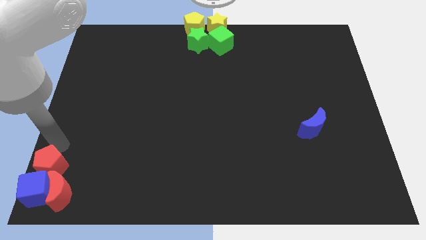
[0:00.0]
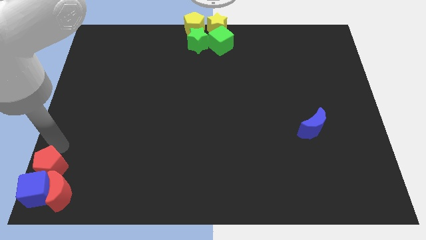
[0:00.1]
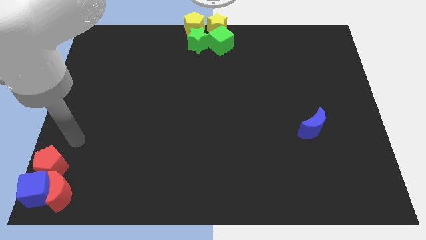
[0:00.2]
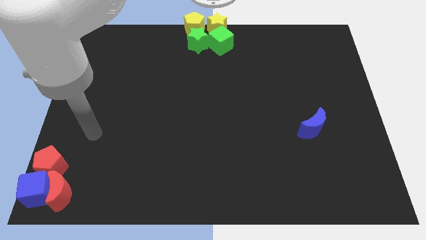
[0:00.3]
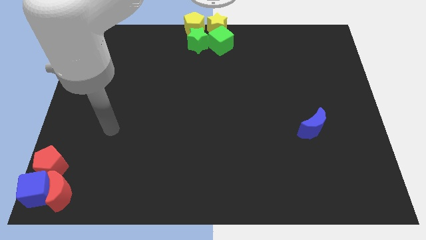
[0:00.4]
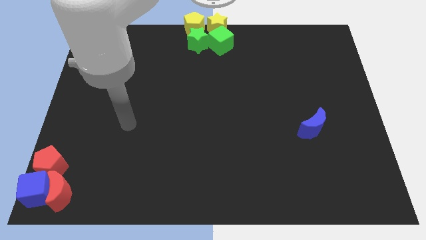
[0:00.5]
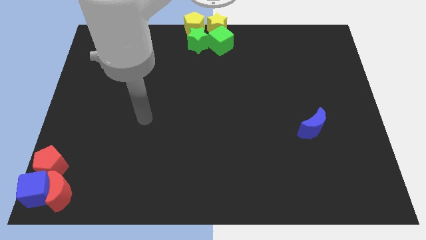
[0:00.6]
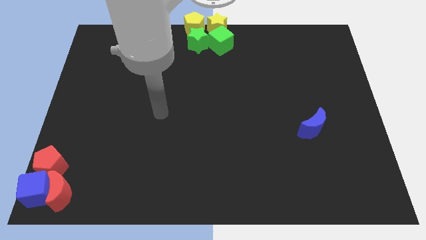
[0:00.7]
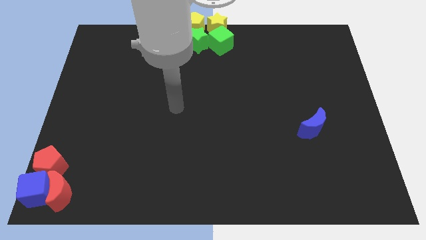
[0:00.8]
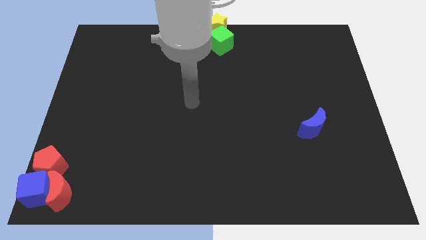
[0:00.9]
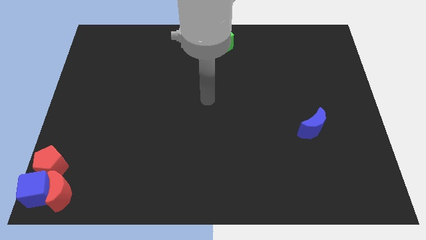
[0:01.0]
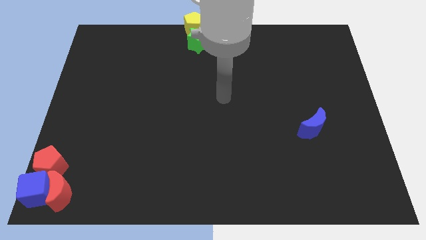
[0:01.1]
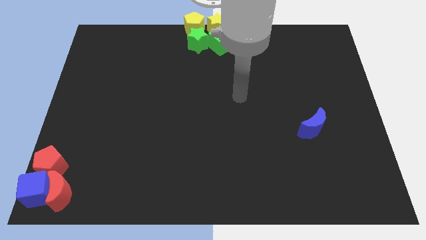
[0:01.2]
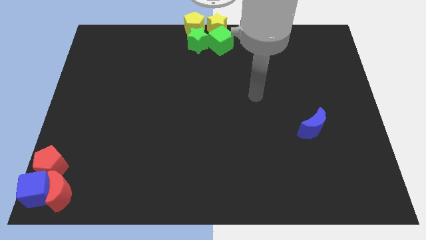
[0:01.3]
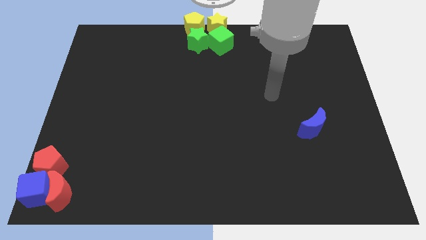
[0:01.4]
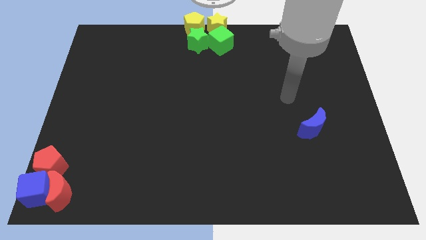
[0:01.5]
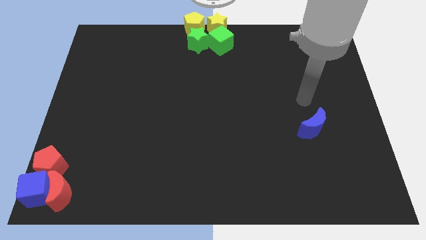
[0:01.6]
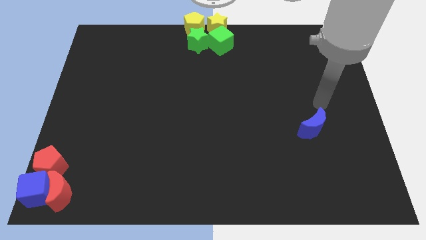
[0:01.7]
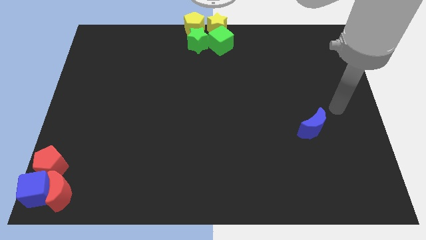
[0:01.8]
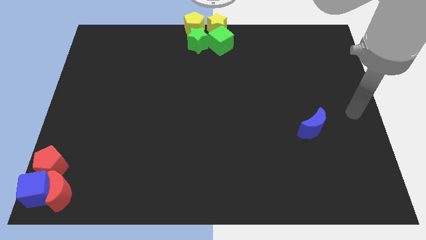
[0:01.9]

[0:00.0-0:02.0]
move your arm away from the red pentagon

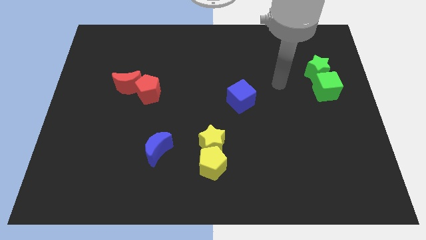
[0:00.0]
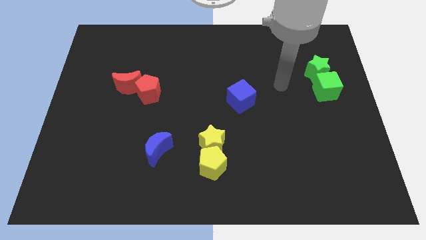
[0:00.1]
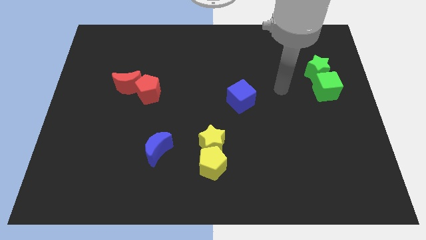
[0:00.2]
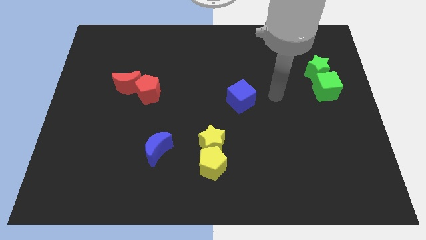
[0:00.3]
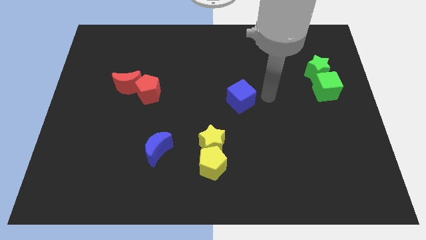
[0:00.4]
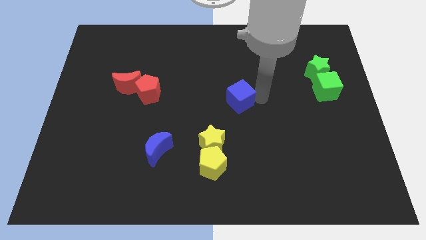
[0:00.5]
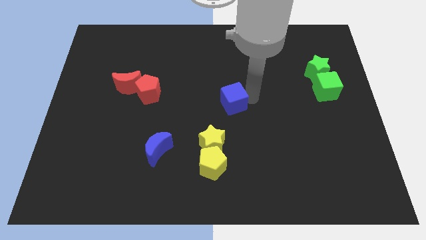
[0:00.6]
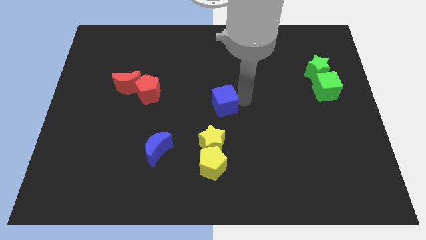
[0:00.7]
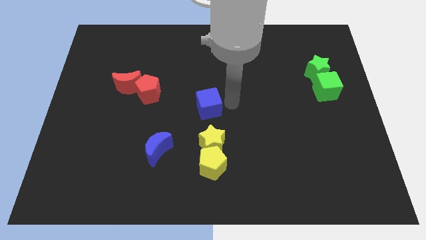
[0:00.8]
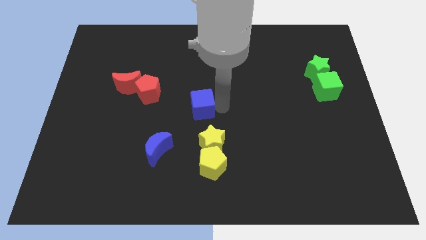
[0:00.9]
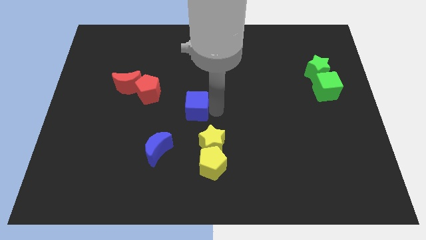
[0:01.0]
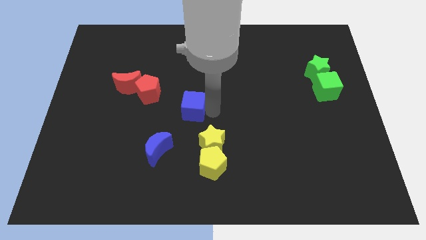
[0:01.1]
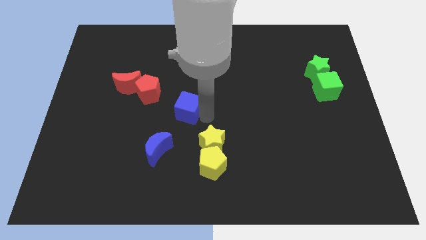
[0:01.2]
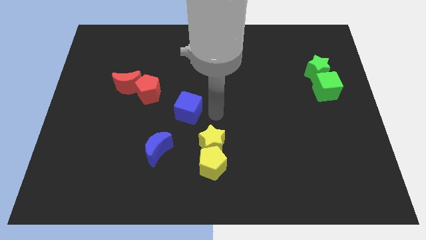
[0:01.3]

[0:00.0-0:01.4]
place blue cube towards blue moon

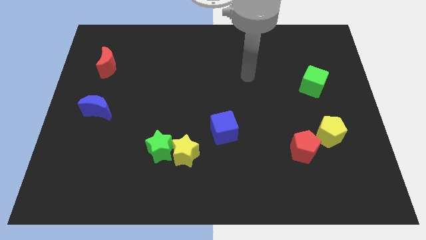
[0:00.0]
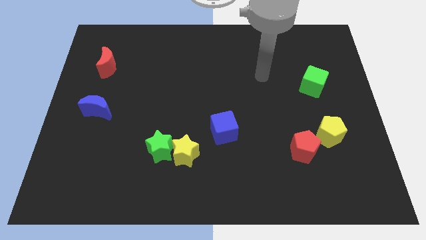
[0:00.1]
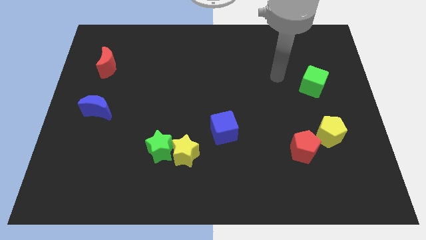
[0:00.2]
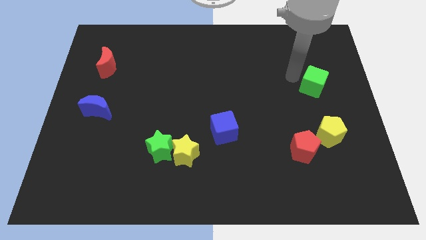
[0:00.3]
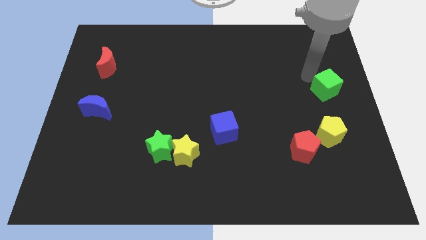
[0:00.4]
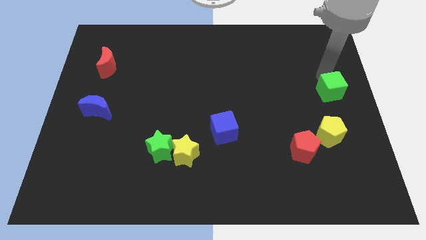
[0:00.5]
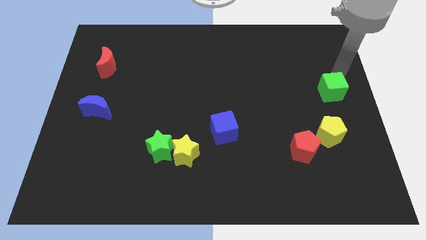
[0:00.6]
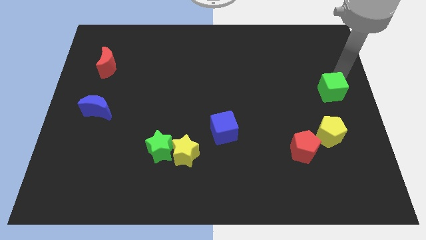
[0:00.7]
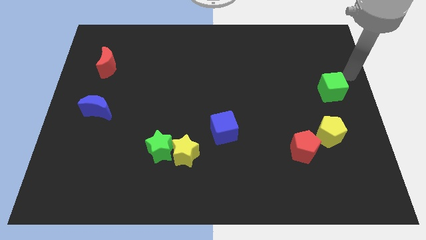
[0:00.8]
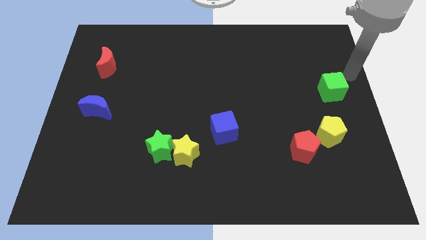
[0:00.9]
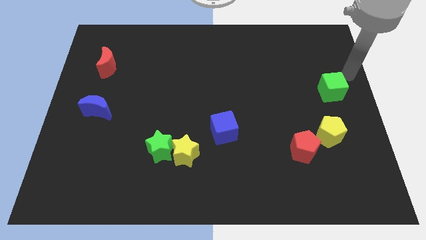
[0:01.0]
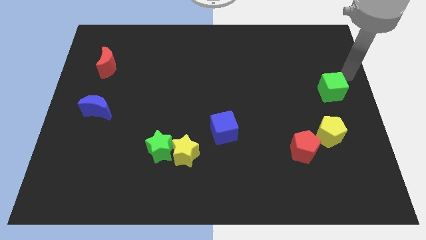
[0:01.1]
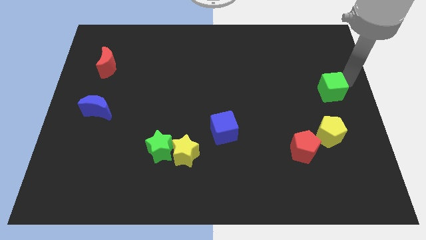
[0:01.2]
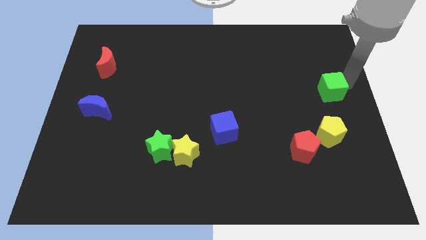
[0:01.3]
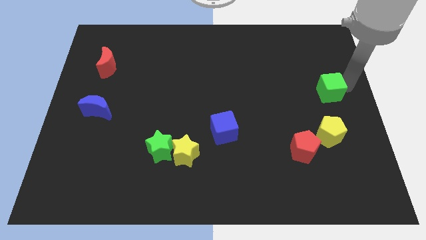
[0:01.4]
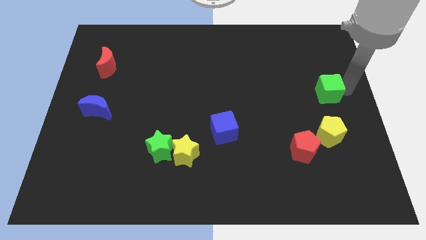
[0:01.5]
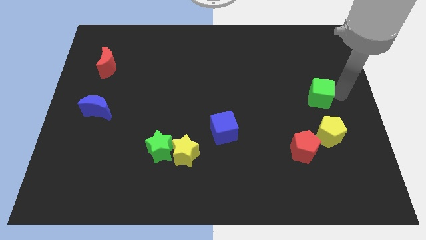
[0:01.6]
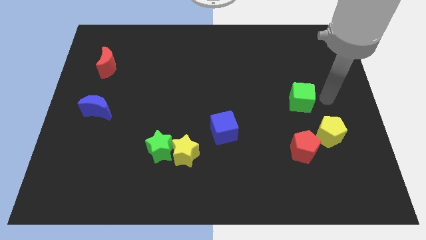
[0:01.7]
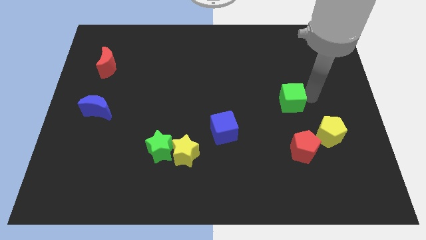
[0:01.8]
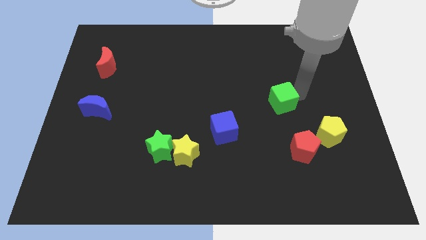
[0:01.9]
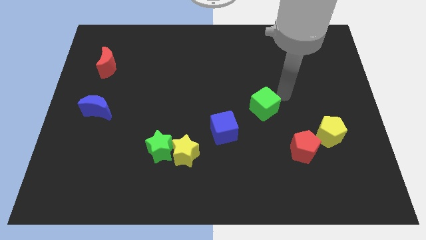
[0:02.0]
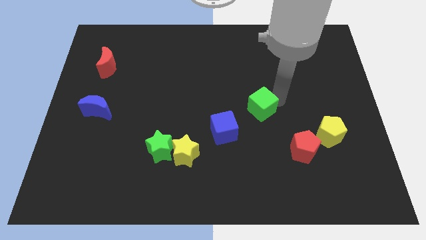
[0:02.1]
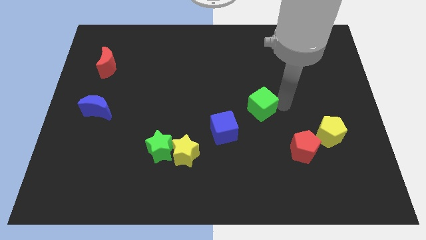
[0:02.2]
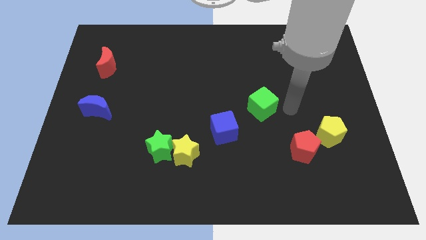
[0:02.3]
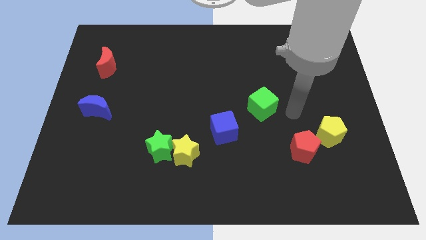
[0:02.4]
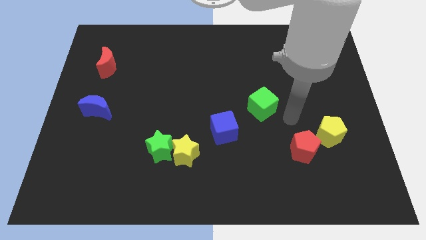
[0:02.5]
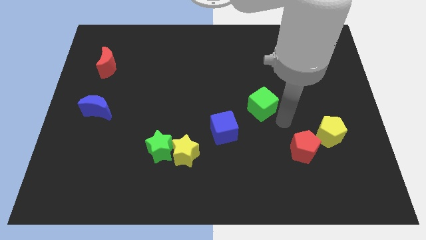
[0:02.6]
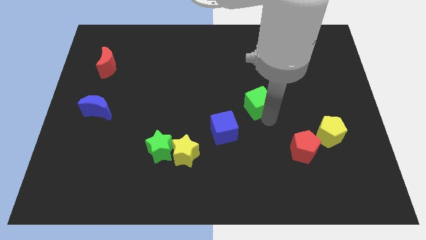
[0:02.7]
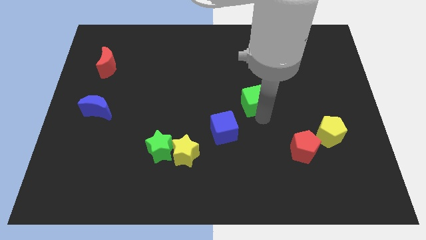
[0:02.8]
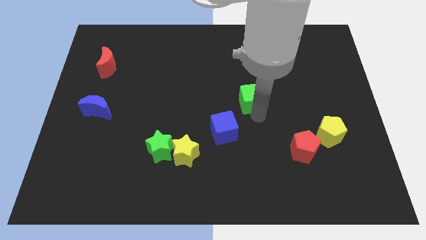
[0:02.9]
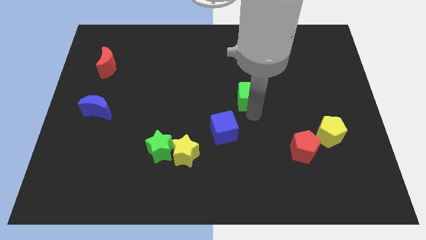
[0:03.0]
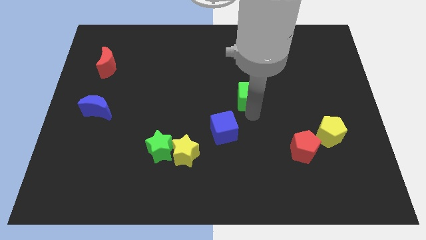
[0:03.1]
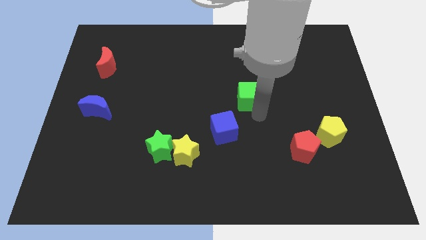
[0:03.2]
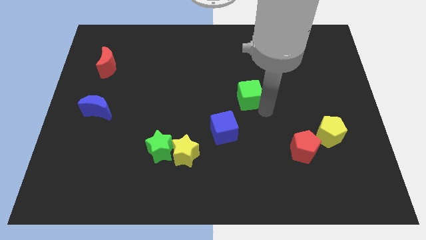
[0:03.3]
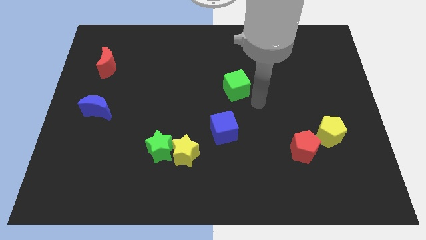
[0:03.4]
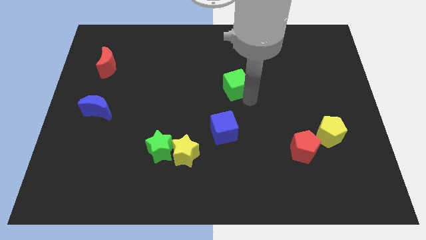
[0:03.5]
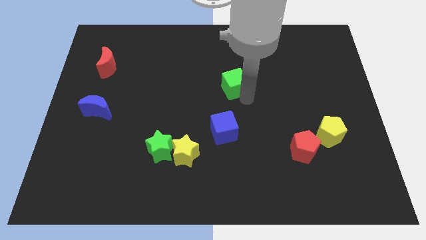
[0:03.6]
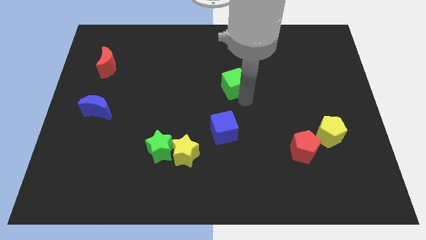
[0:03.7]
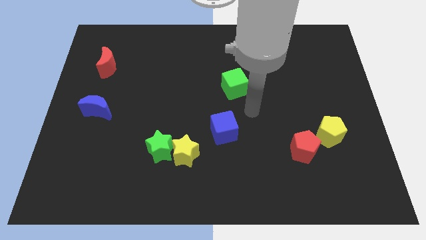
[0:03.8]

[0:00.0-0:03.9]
place green cube parallel to blue cube

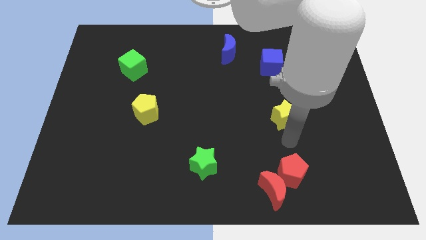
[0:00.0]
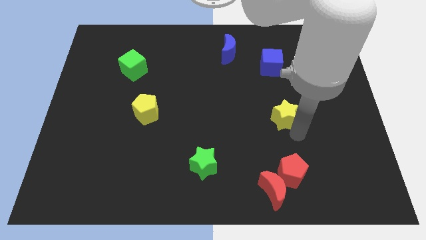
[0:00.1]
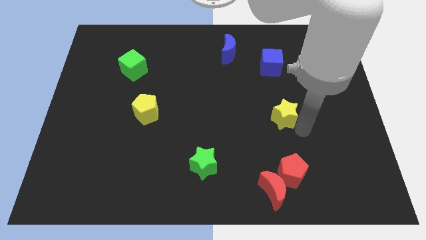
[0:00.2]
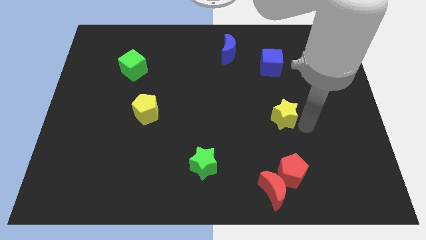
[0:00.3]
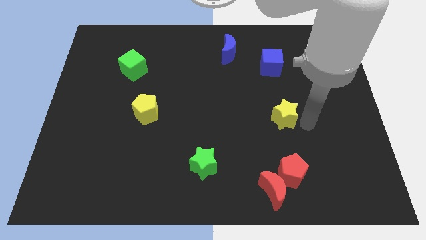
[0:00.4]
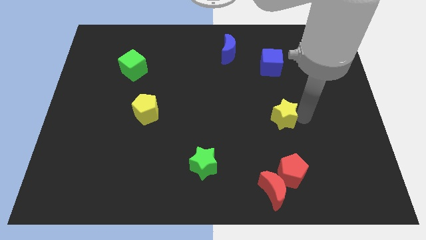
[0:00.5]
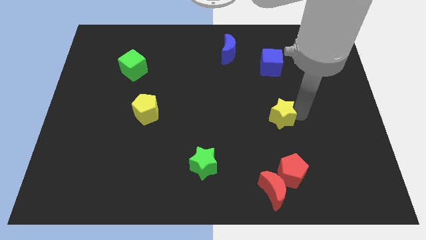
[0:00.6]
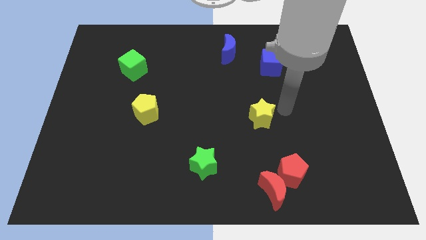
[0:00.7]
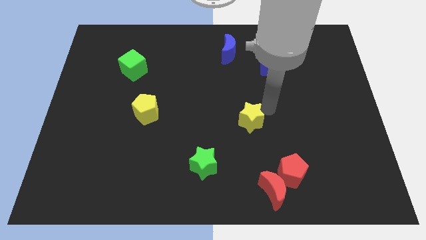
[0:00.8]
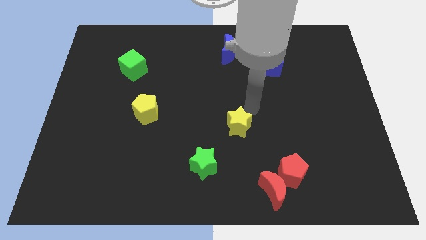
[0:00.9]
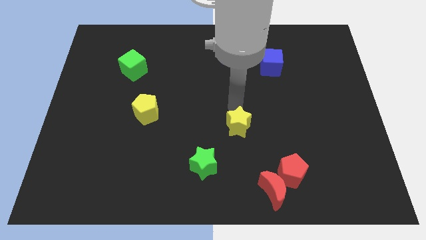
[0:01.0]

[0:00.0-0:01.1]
push the yellow star slightly on the left side

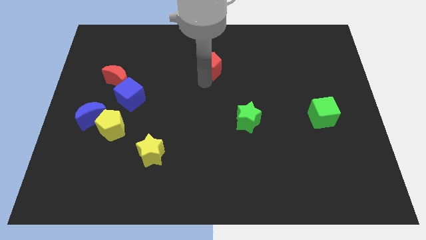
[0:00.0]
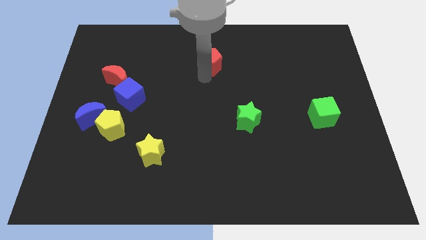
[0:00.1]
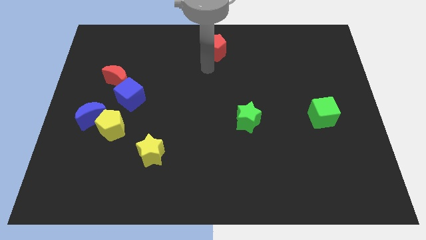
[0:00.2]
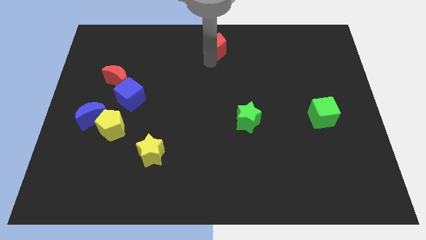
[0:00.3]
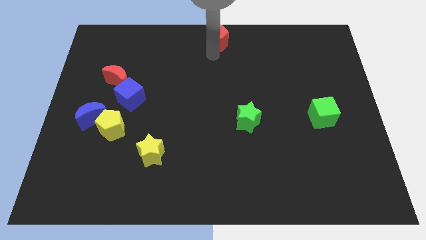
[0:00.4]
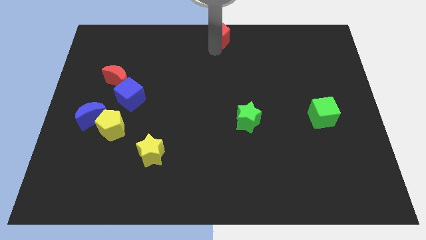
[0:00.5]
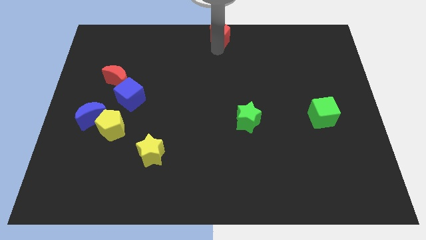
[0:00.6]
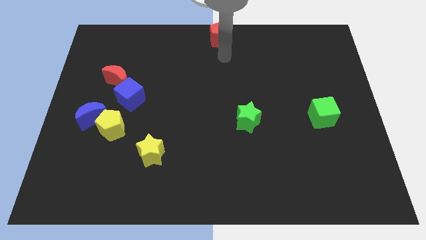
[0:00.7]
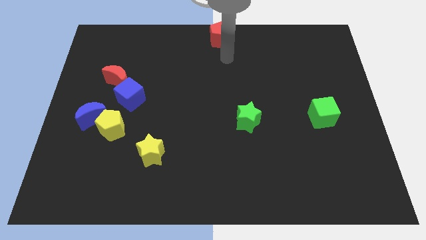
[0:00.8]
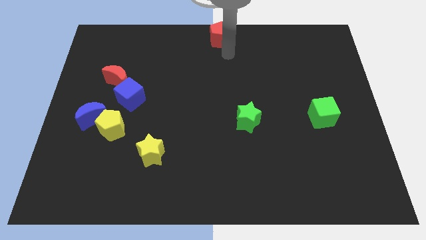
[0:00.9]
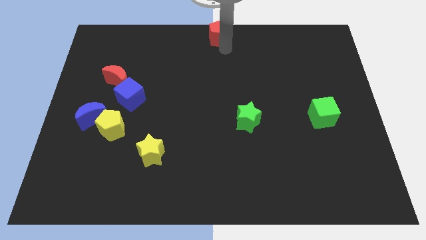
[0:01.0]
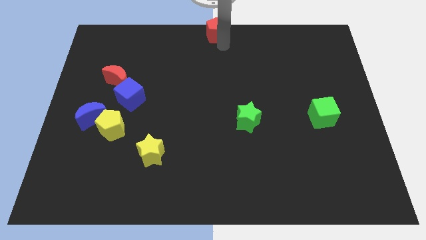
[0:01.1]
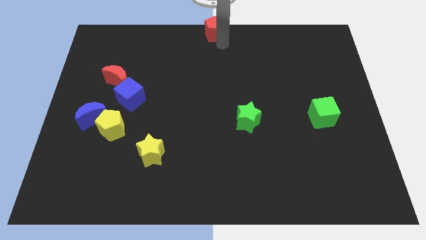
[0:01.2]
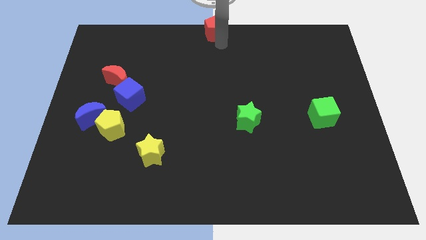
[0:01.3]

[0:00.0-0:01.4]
place the red pentagon at the top center of the board
